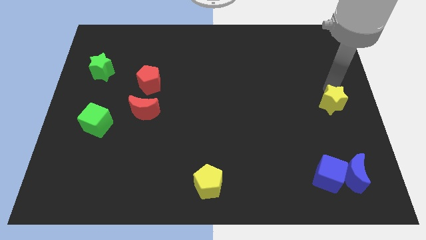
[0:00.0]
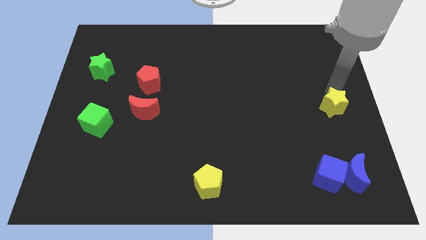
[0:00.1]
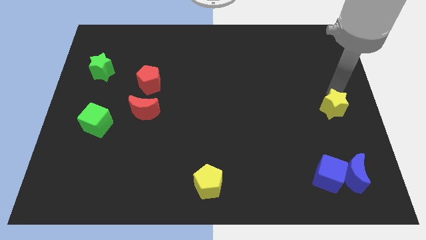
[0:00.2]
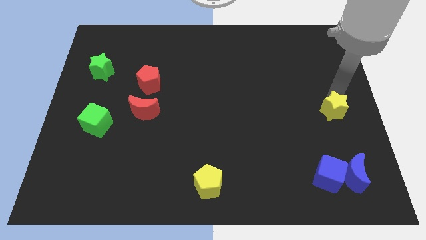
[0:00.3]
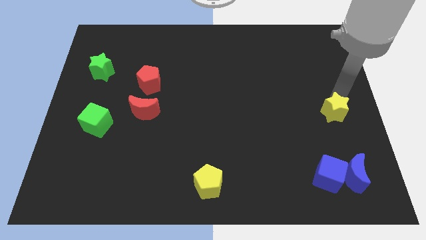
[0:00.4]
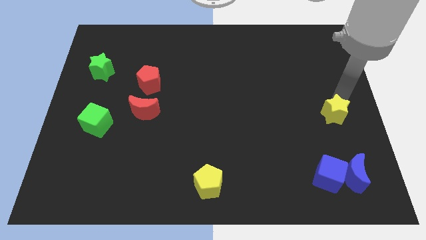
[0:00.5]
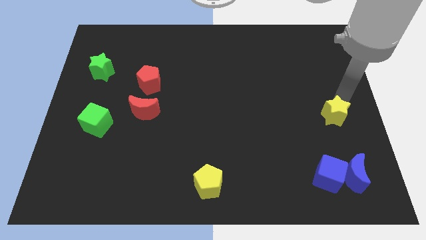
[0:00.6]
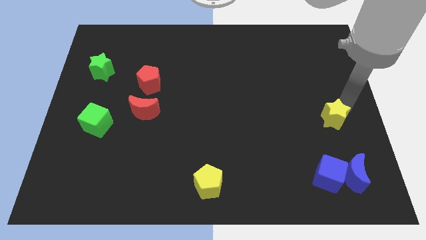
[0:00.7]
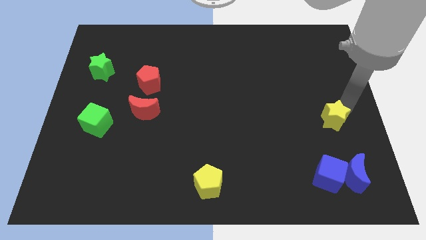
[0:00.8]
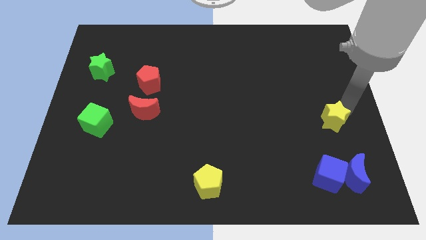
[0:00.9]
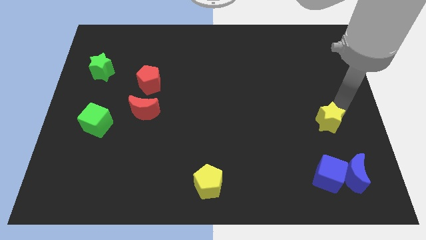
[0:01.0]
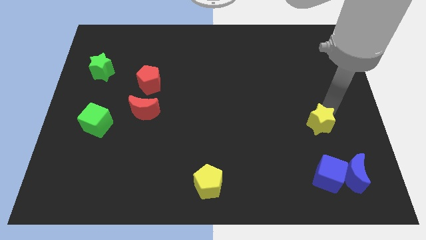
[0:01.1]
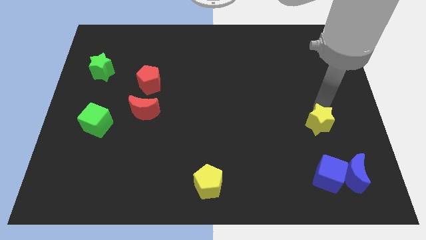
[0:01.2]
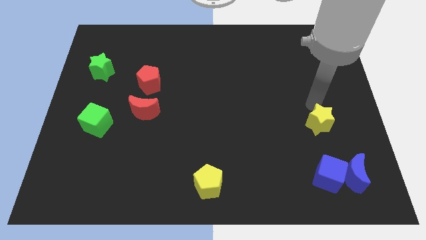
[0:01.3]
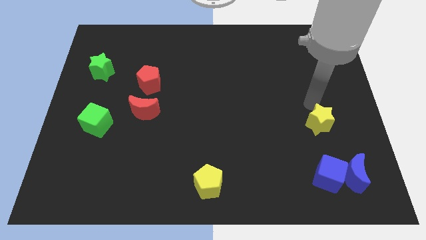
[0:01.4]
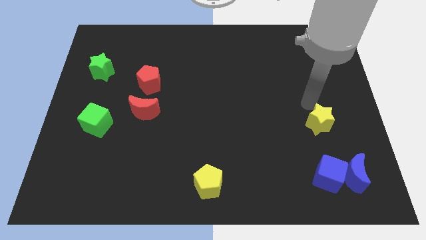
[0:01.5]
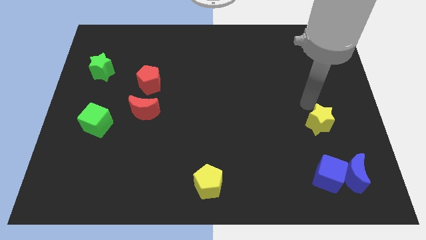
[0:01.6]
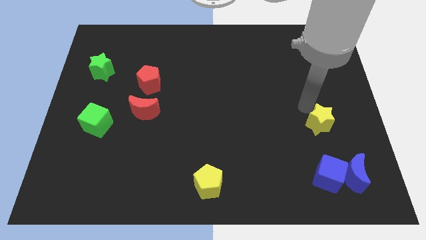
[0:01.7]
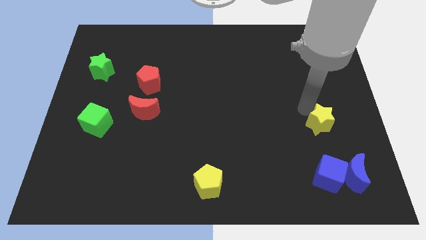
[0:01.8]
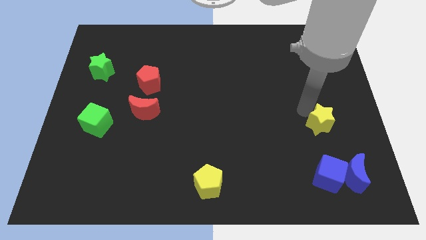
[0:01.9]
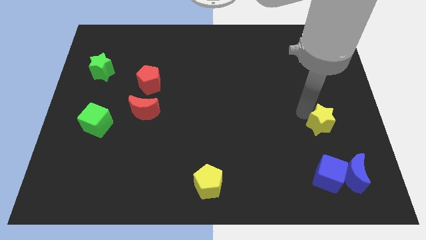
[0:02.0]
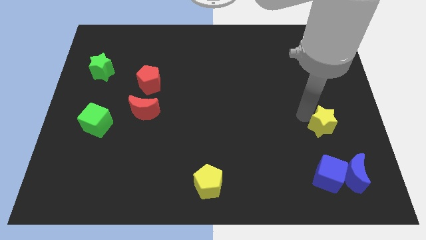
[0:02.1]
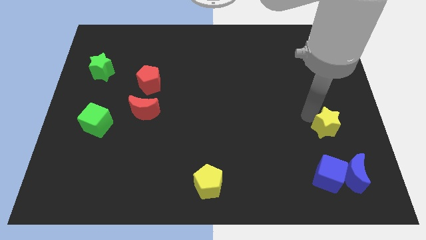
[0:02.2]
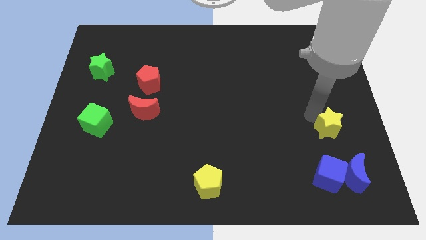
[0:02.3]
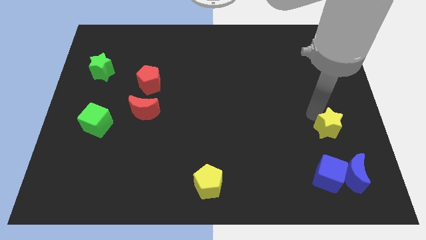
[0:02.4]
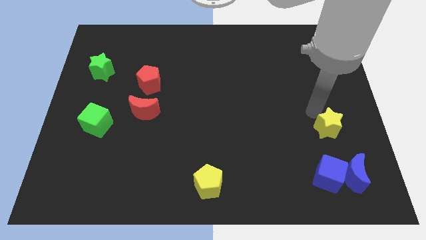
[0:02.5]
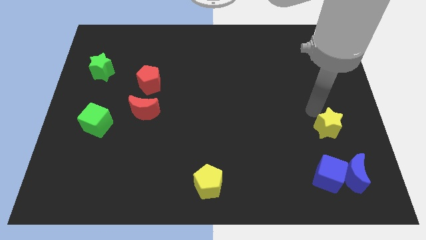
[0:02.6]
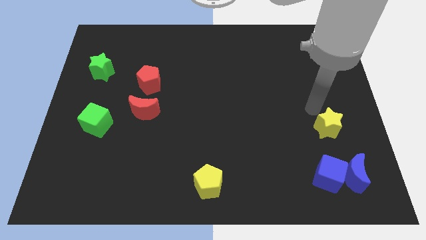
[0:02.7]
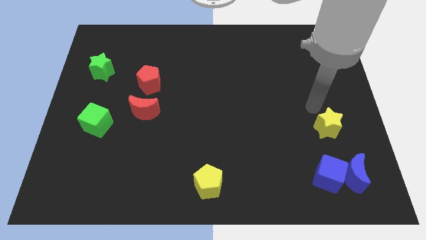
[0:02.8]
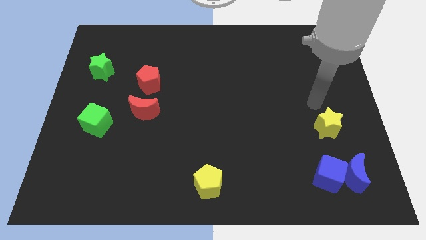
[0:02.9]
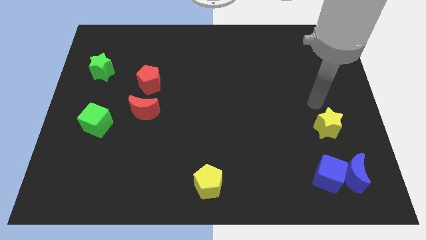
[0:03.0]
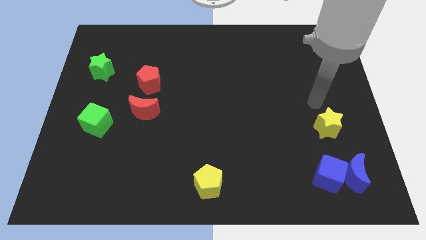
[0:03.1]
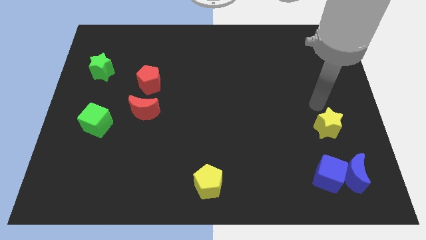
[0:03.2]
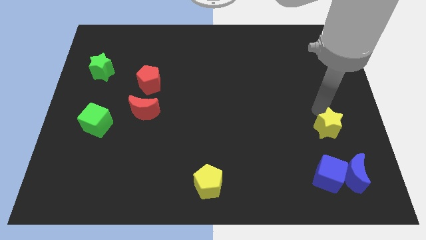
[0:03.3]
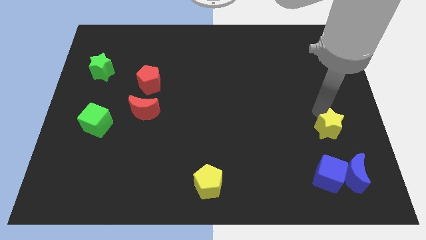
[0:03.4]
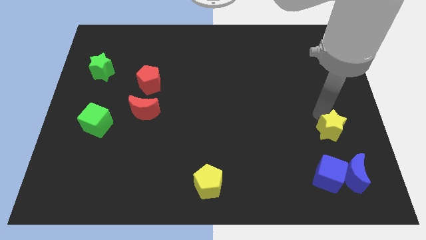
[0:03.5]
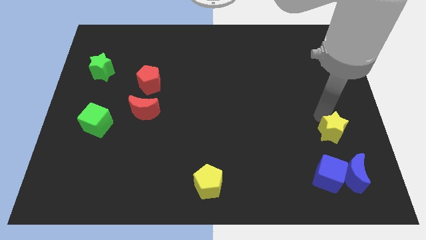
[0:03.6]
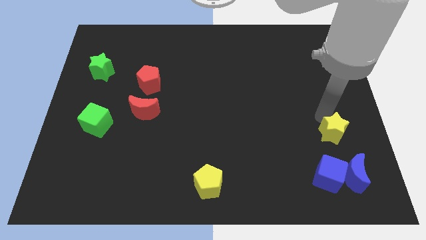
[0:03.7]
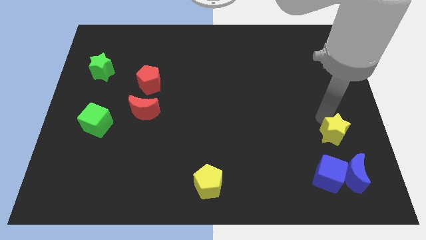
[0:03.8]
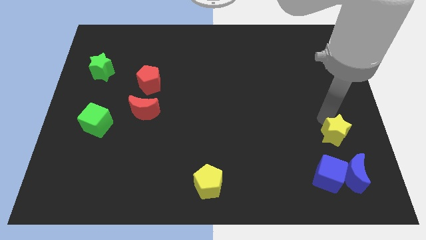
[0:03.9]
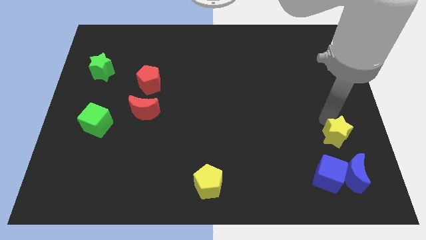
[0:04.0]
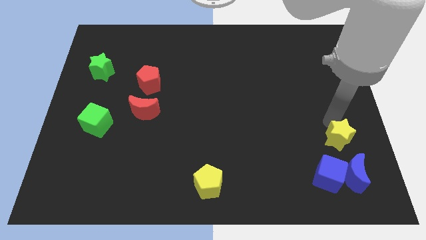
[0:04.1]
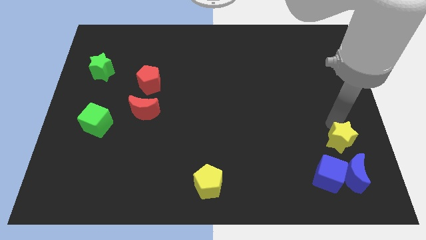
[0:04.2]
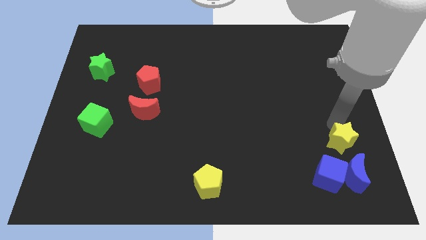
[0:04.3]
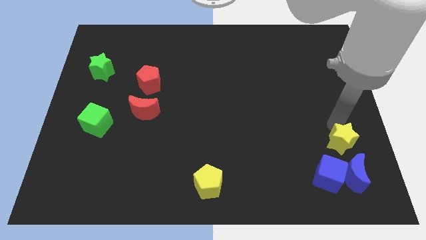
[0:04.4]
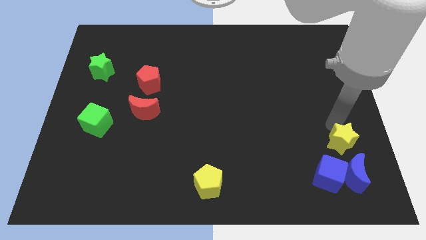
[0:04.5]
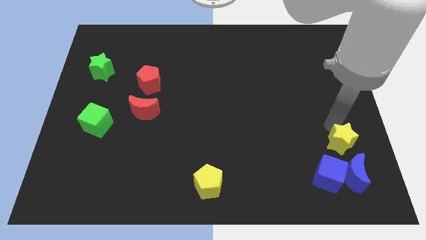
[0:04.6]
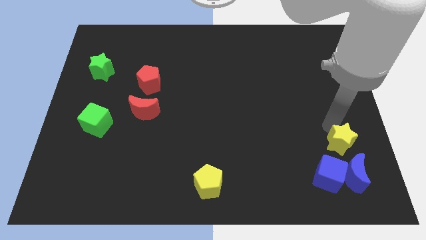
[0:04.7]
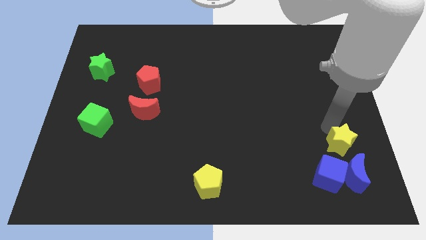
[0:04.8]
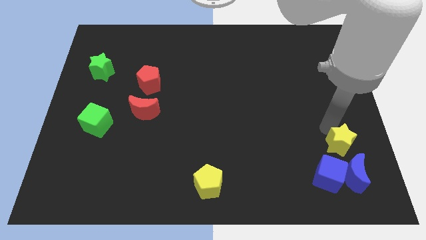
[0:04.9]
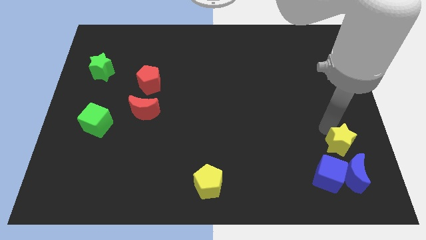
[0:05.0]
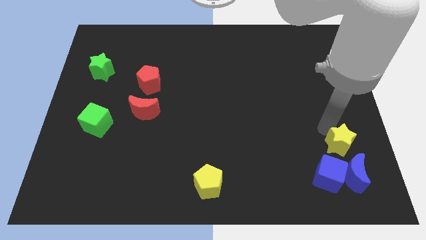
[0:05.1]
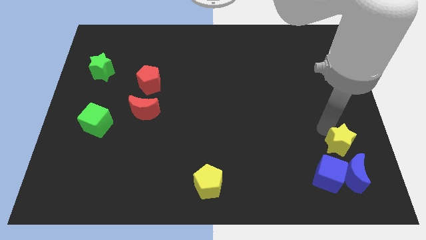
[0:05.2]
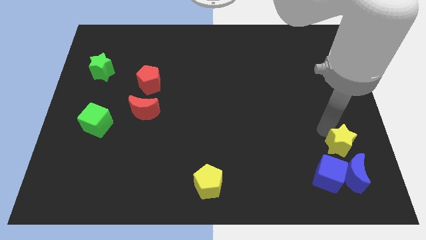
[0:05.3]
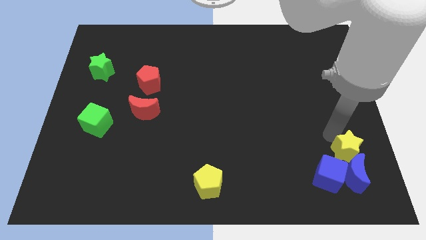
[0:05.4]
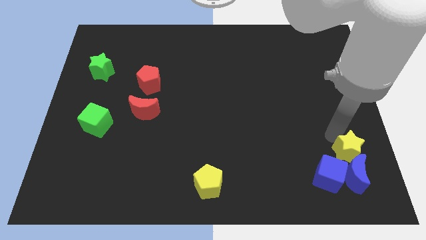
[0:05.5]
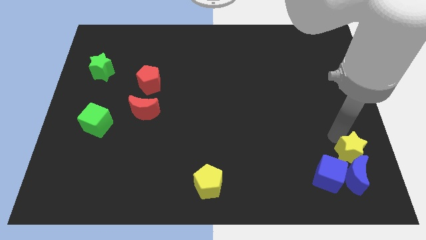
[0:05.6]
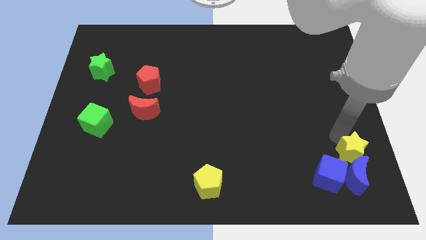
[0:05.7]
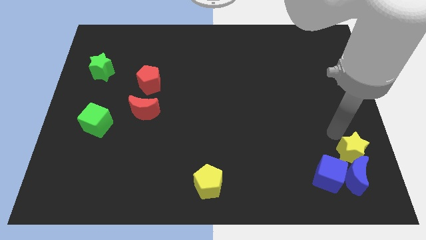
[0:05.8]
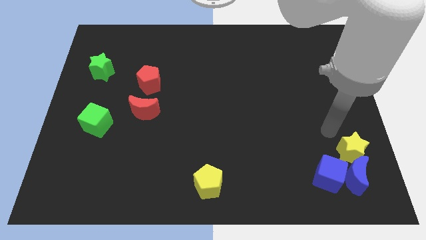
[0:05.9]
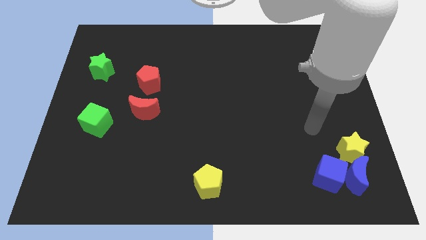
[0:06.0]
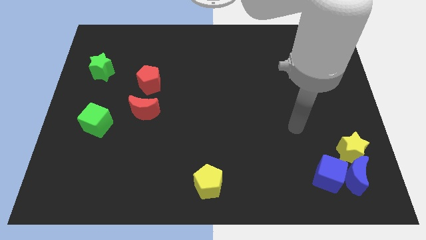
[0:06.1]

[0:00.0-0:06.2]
move yellow star into blue cube and blue moon

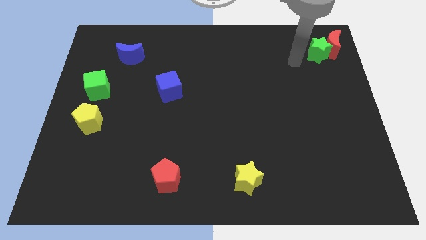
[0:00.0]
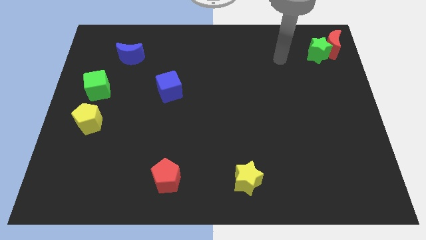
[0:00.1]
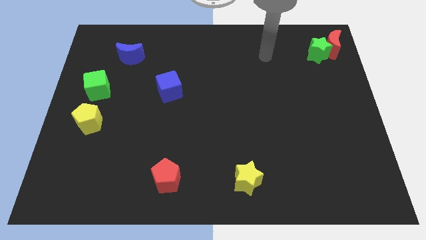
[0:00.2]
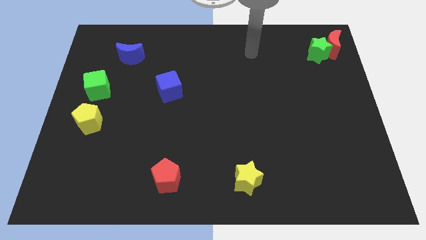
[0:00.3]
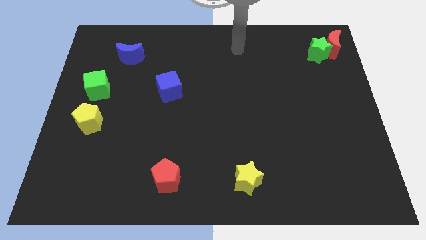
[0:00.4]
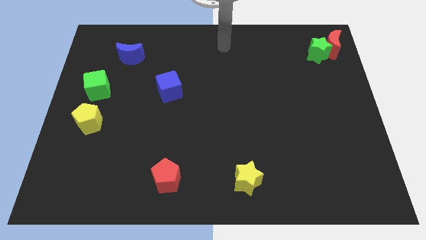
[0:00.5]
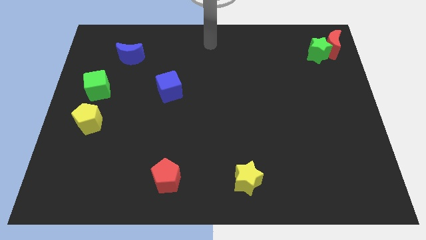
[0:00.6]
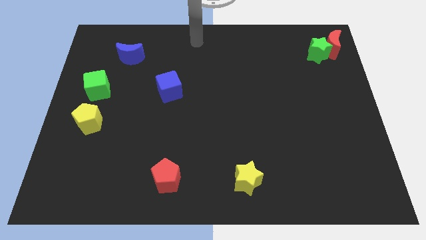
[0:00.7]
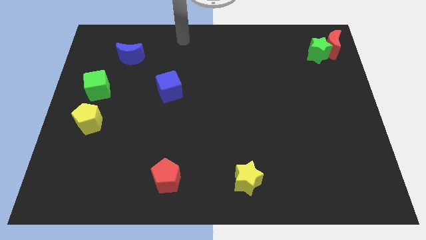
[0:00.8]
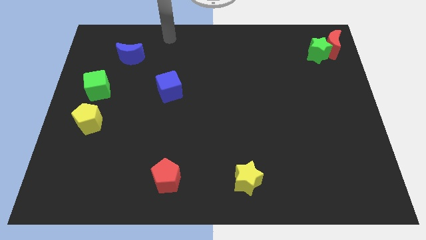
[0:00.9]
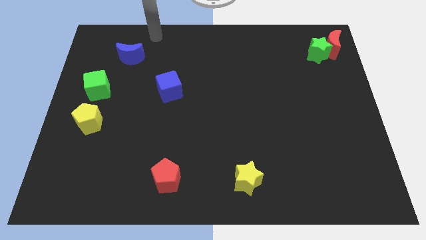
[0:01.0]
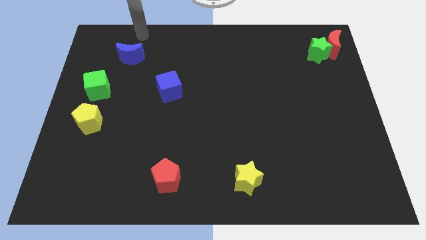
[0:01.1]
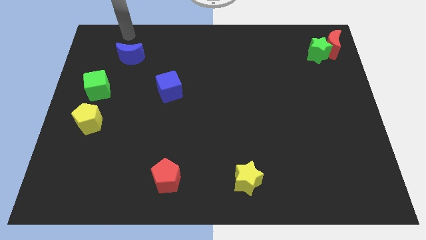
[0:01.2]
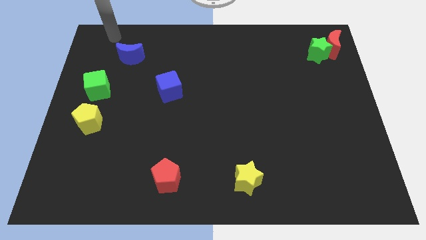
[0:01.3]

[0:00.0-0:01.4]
move your arm towards the top left corner of the board

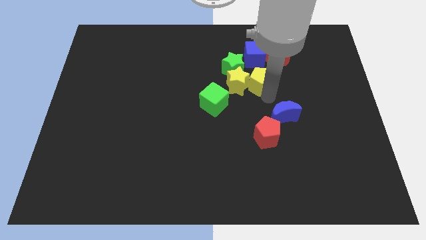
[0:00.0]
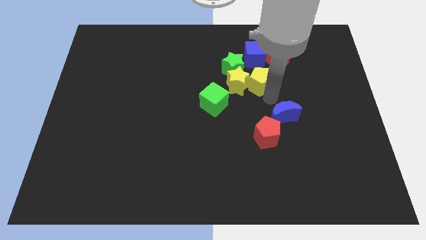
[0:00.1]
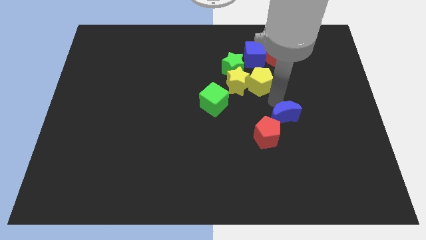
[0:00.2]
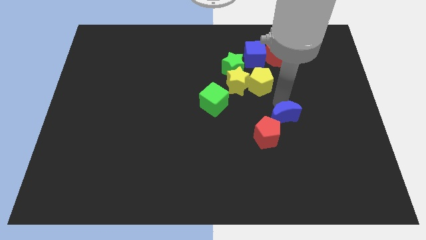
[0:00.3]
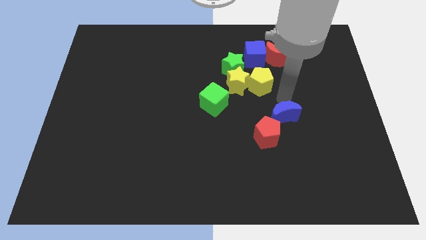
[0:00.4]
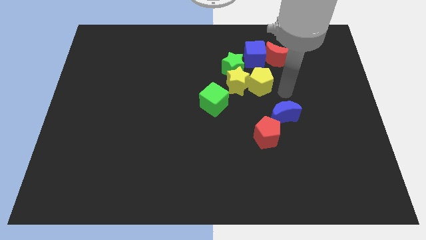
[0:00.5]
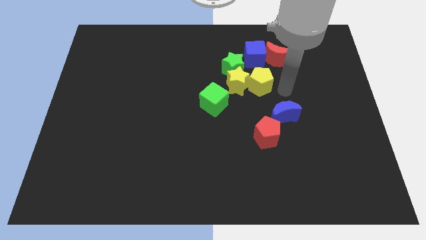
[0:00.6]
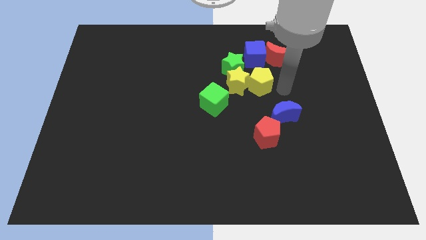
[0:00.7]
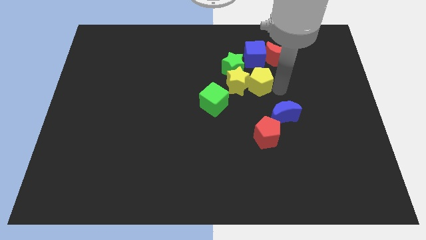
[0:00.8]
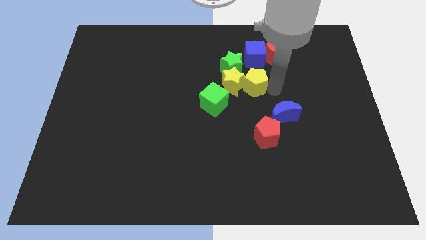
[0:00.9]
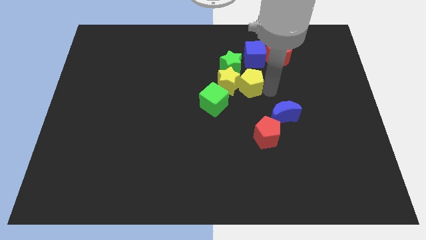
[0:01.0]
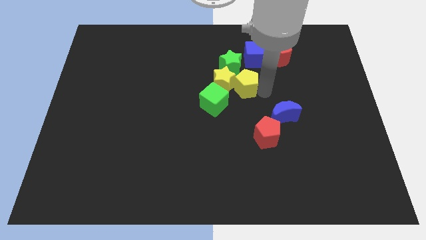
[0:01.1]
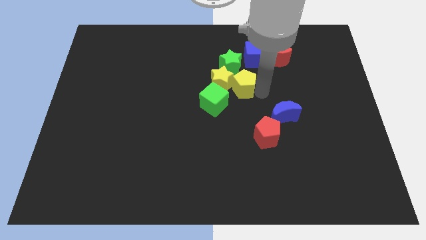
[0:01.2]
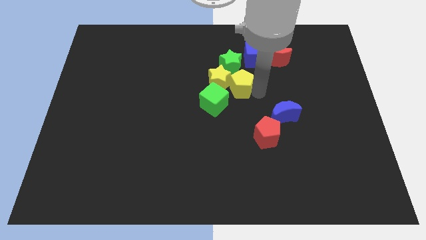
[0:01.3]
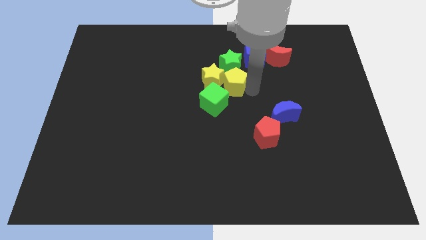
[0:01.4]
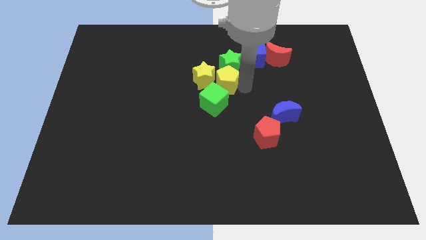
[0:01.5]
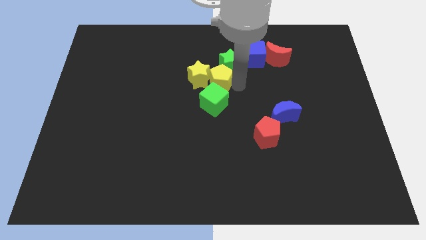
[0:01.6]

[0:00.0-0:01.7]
move the yellow blocks to the left side
